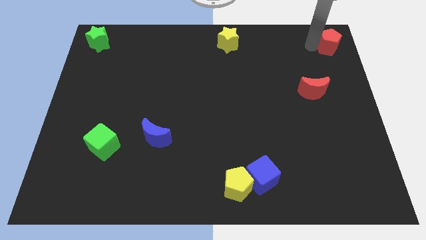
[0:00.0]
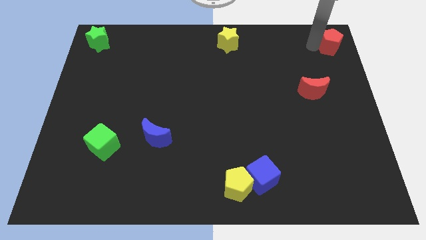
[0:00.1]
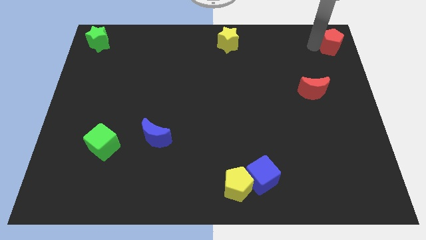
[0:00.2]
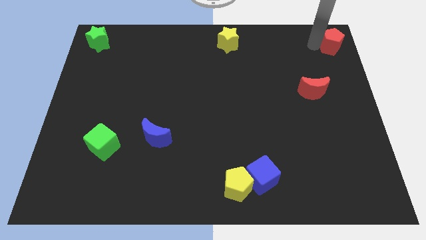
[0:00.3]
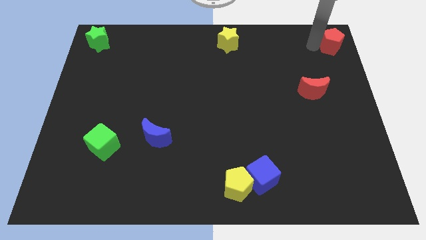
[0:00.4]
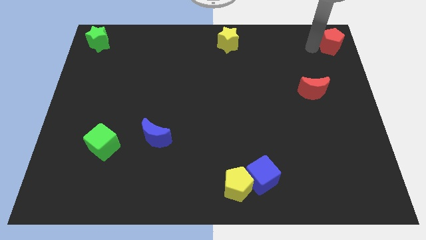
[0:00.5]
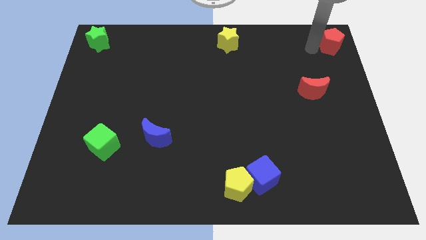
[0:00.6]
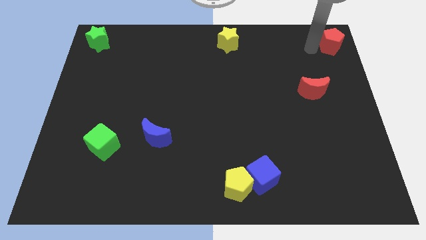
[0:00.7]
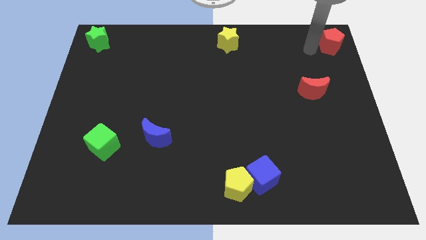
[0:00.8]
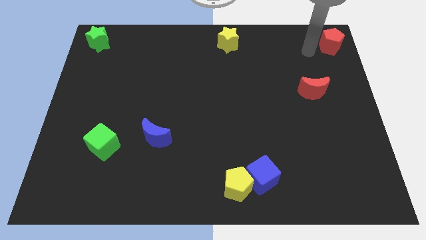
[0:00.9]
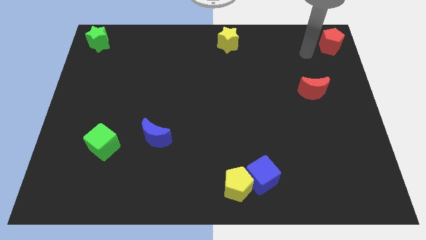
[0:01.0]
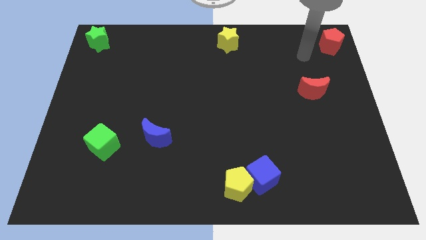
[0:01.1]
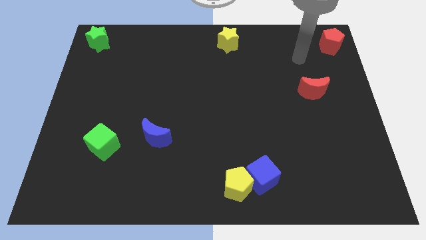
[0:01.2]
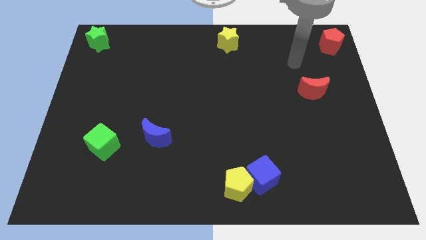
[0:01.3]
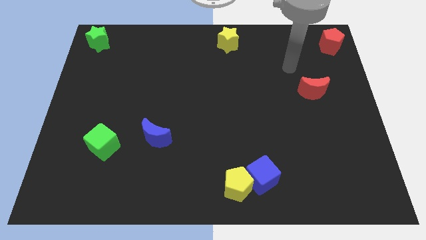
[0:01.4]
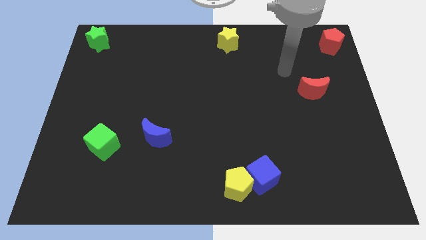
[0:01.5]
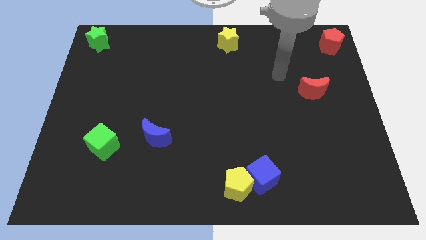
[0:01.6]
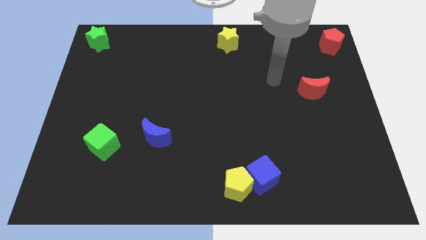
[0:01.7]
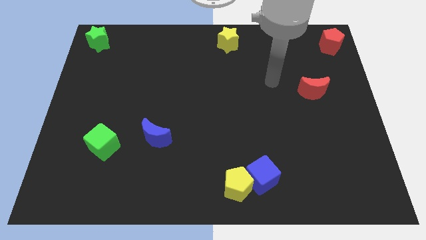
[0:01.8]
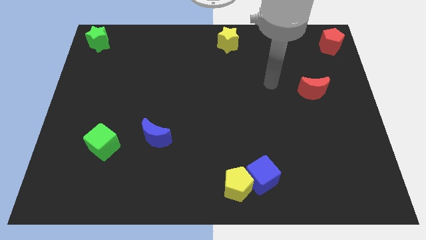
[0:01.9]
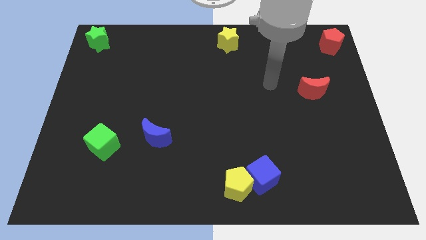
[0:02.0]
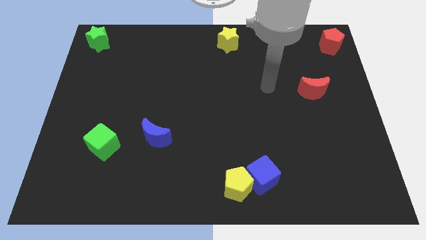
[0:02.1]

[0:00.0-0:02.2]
move the red pentagon at the top right corner

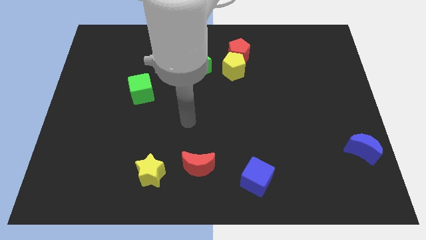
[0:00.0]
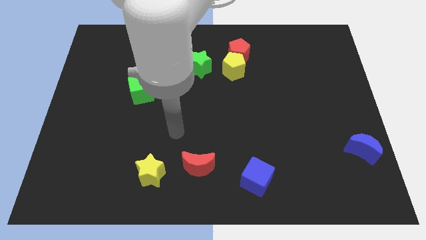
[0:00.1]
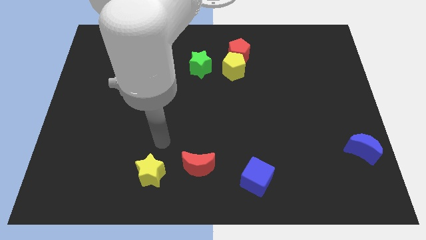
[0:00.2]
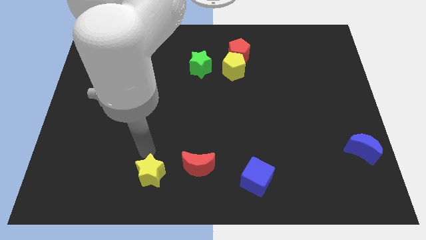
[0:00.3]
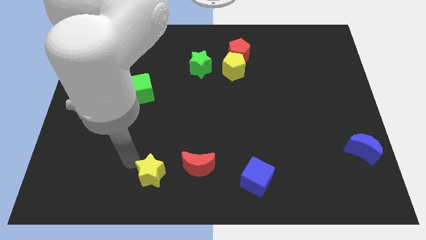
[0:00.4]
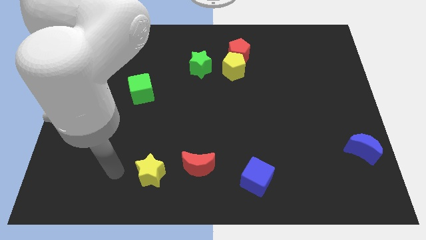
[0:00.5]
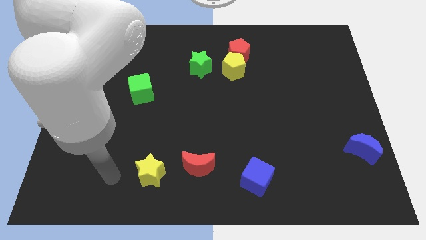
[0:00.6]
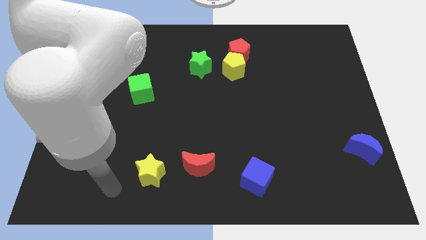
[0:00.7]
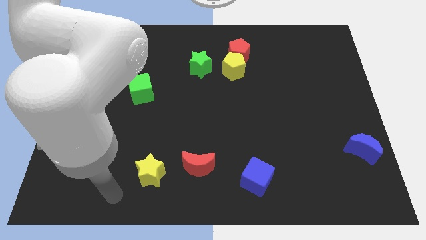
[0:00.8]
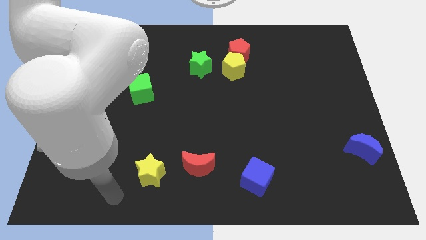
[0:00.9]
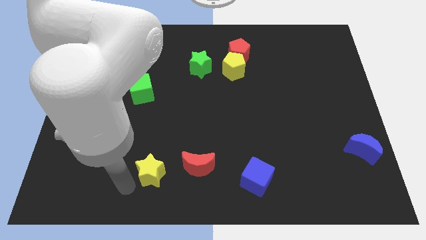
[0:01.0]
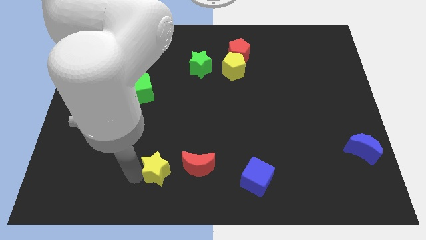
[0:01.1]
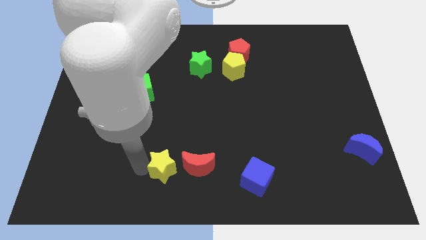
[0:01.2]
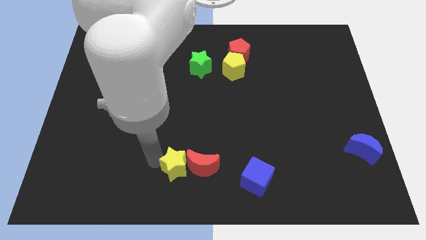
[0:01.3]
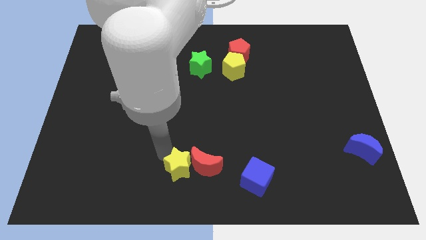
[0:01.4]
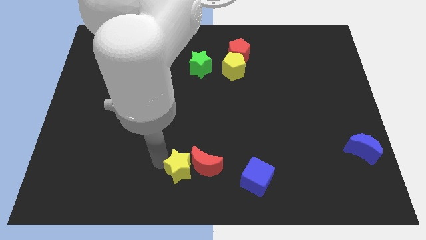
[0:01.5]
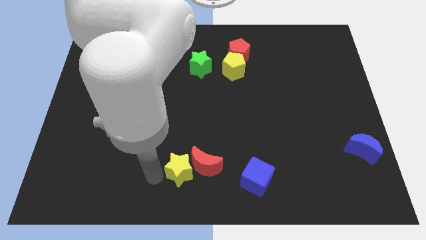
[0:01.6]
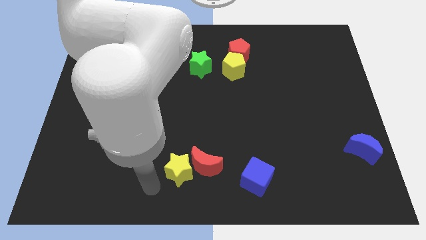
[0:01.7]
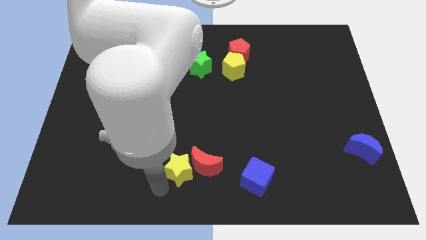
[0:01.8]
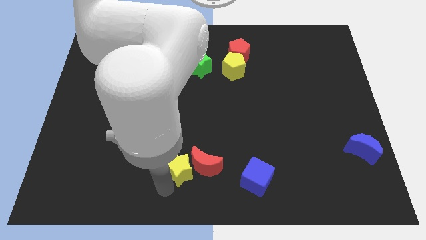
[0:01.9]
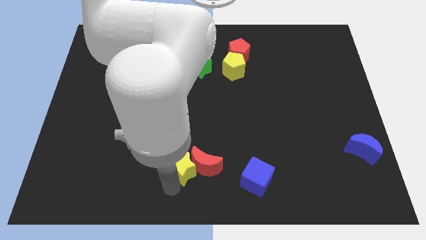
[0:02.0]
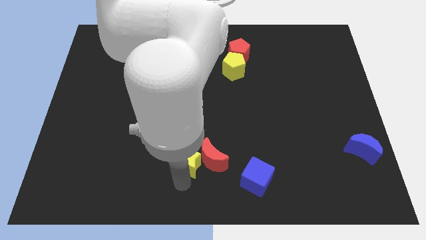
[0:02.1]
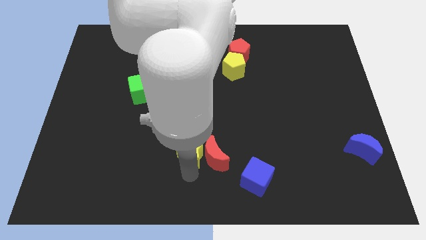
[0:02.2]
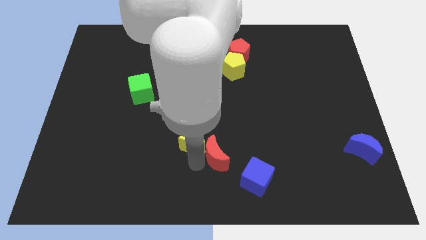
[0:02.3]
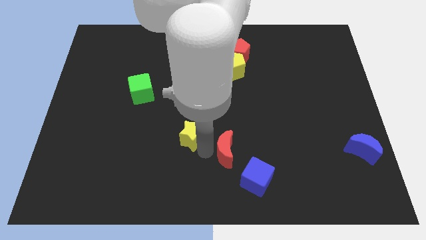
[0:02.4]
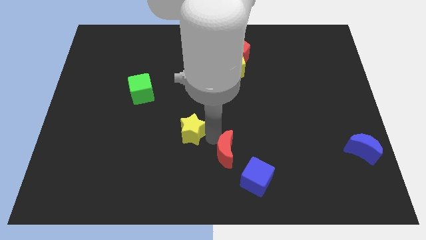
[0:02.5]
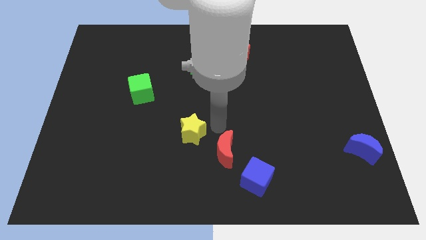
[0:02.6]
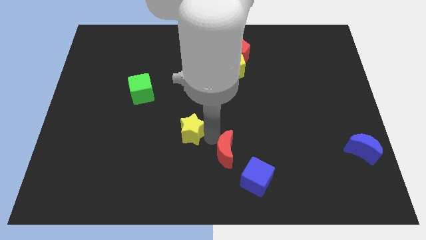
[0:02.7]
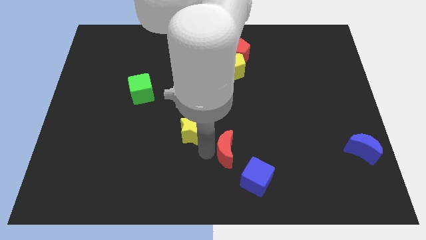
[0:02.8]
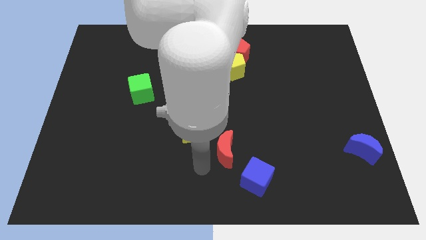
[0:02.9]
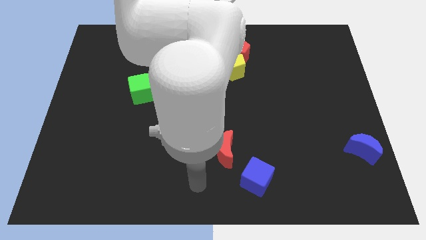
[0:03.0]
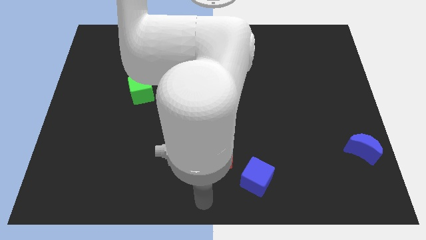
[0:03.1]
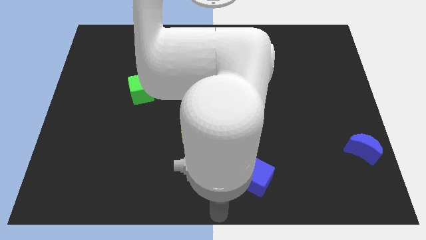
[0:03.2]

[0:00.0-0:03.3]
place the yellow star between red moon and green cube

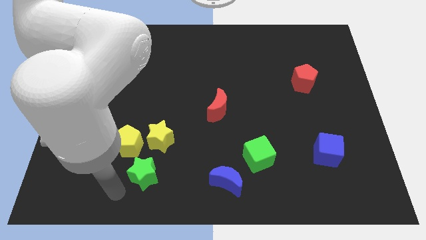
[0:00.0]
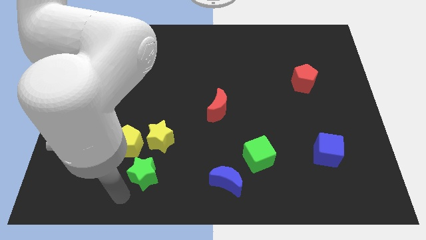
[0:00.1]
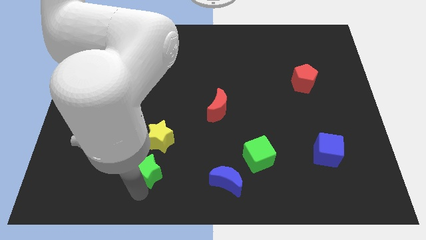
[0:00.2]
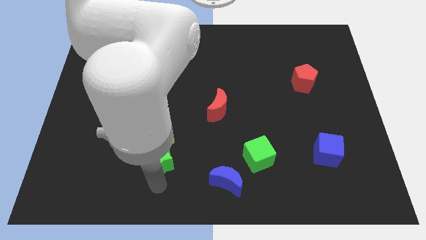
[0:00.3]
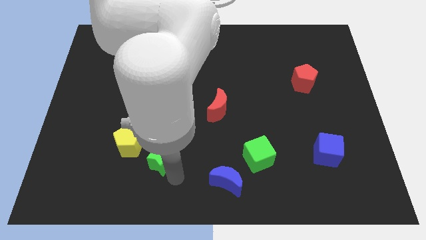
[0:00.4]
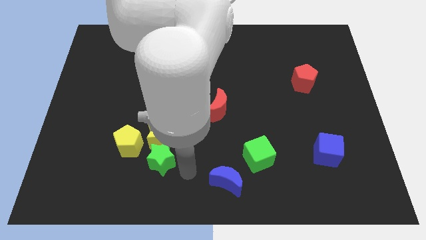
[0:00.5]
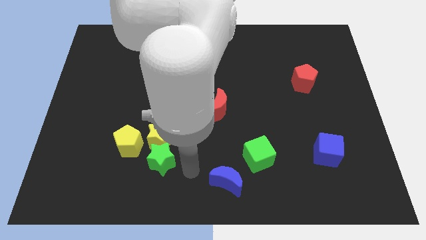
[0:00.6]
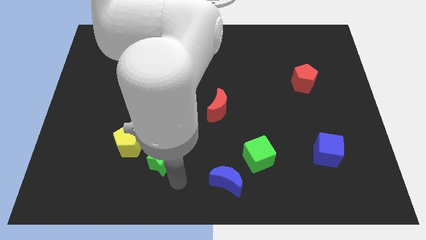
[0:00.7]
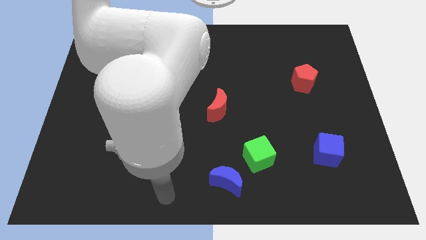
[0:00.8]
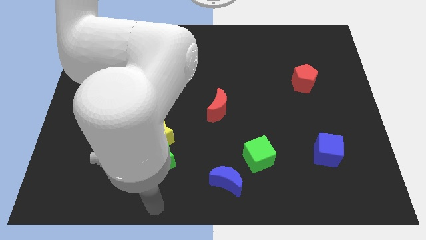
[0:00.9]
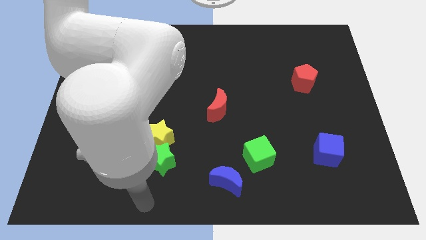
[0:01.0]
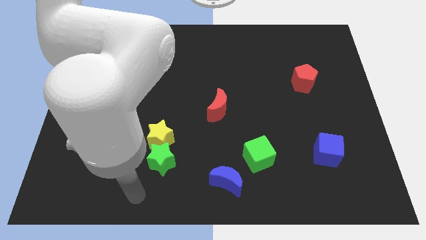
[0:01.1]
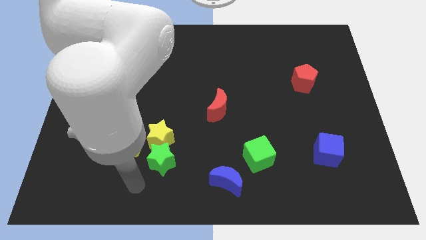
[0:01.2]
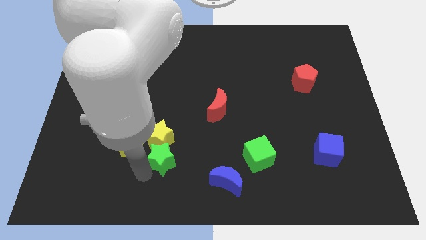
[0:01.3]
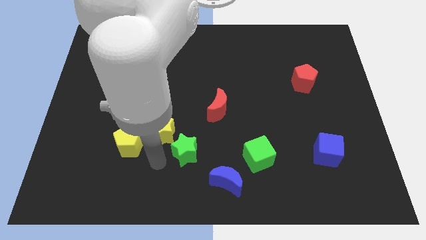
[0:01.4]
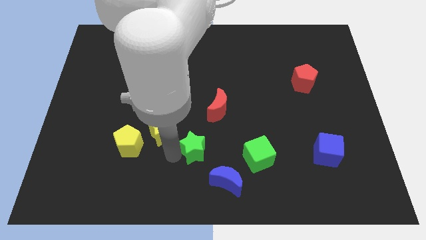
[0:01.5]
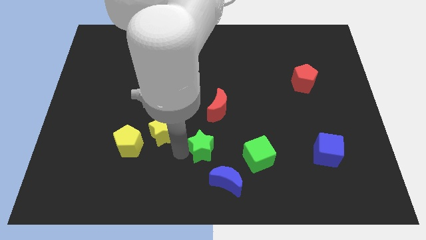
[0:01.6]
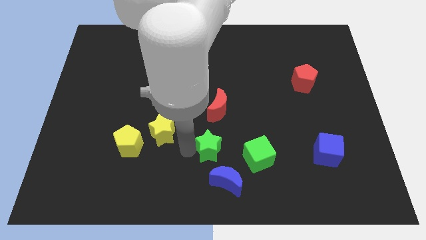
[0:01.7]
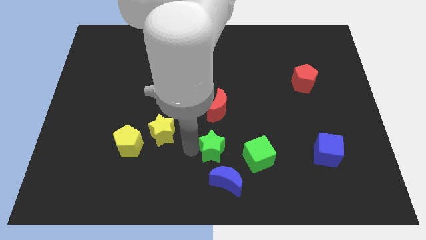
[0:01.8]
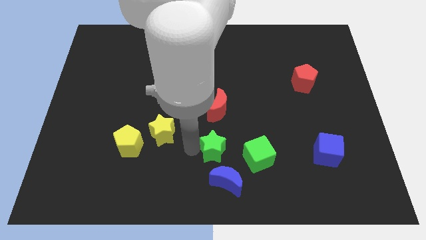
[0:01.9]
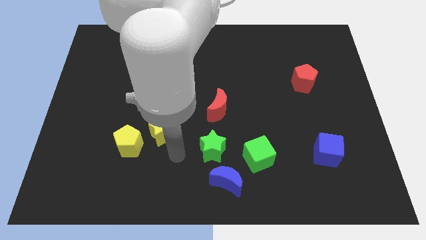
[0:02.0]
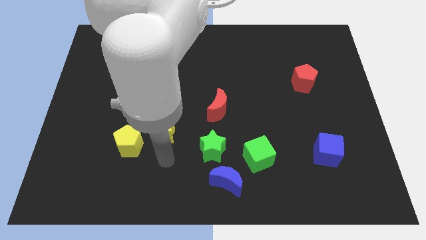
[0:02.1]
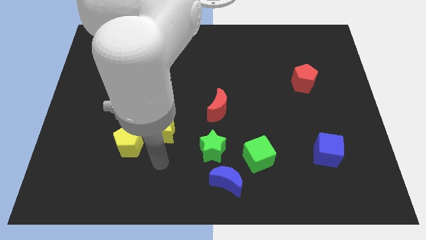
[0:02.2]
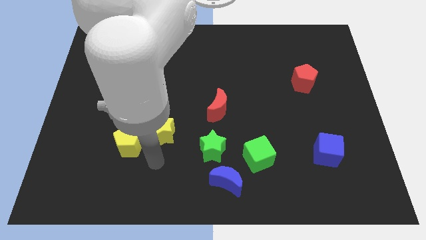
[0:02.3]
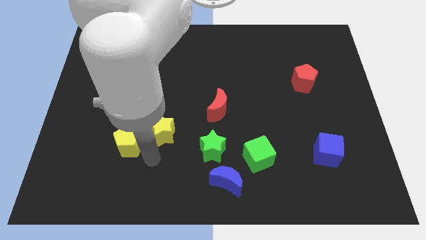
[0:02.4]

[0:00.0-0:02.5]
move green star in between red moon and blue moon

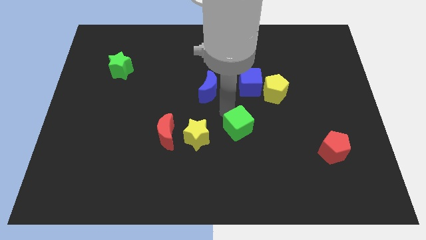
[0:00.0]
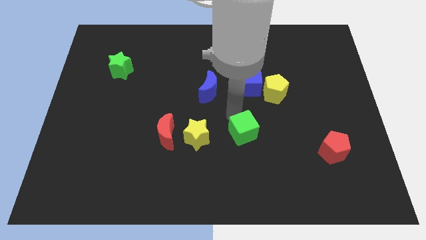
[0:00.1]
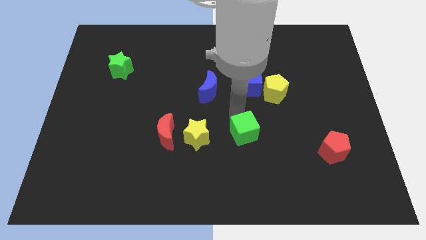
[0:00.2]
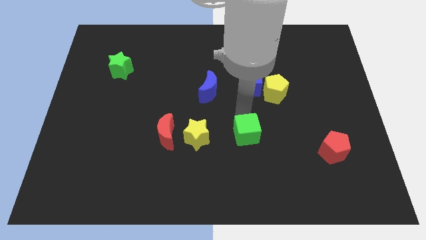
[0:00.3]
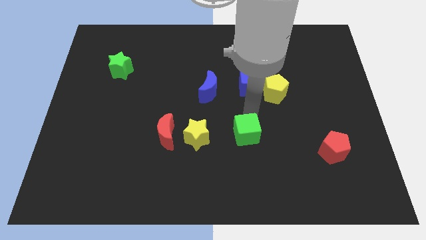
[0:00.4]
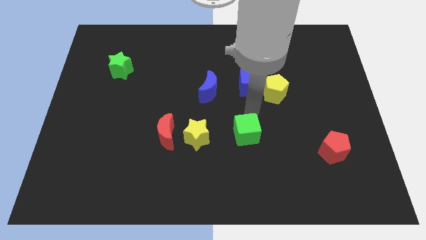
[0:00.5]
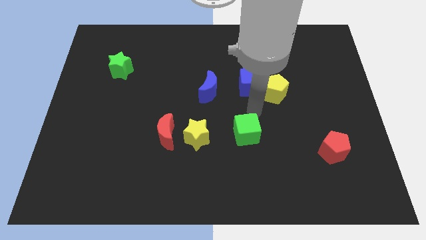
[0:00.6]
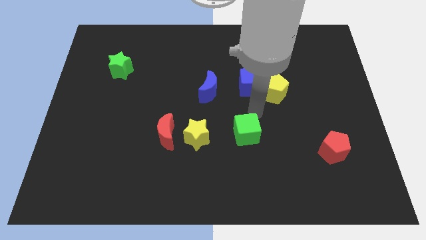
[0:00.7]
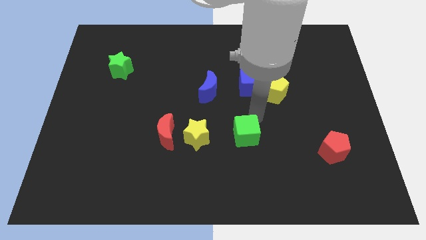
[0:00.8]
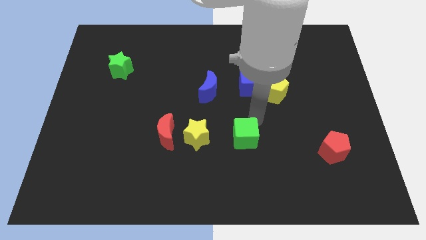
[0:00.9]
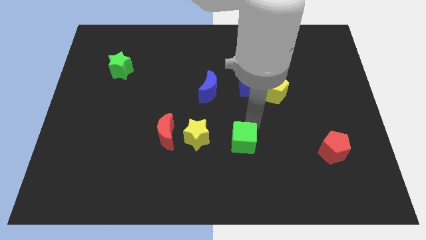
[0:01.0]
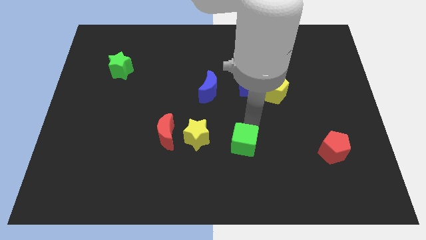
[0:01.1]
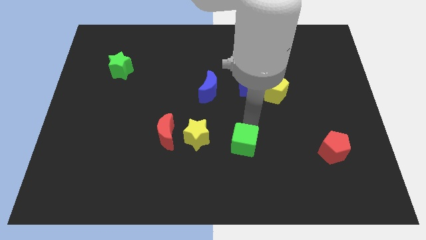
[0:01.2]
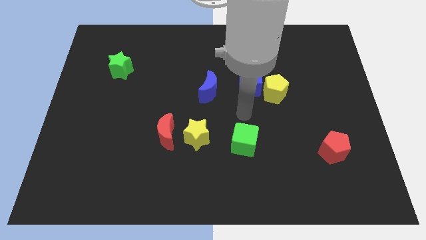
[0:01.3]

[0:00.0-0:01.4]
move the green cube diagonally to blue cube
